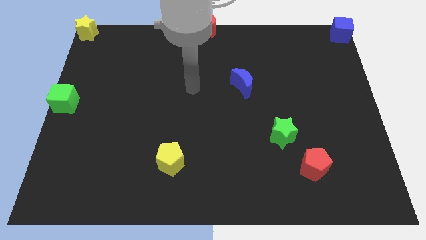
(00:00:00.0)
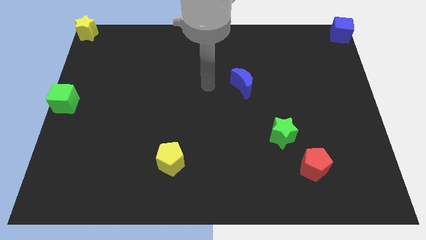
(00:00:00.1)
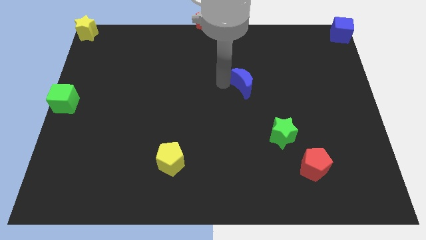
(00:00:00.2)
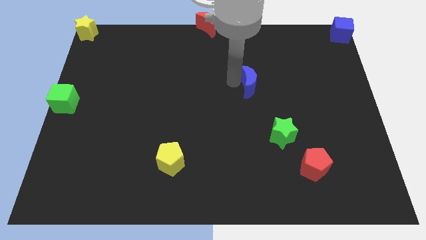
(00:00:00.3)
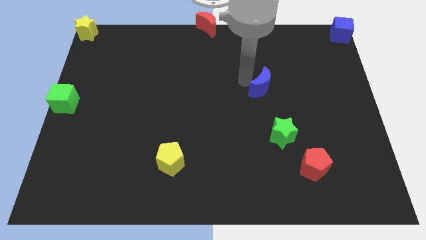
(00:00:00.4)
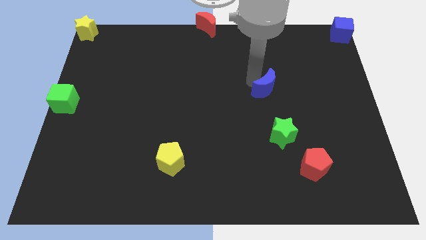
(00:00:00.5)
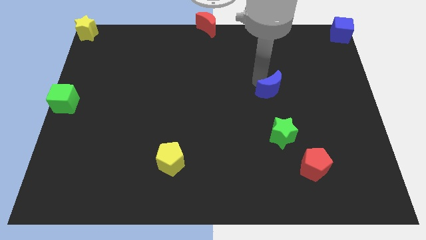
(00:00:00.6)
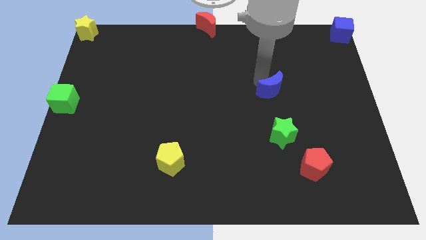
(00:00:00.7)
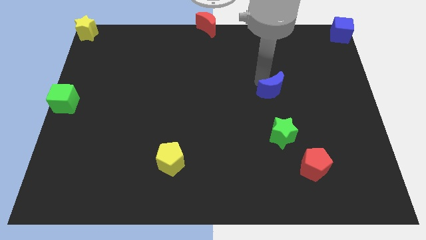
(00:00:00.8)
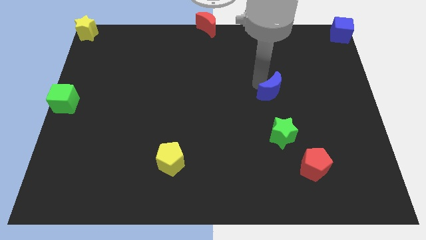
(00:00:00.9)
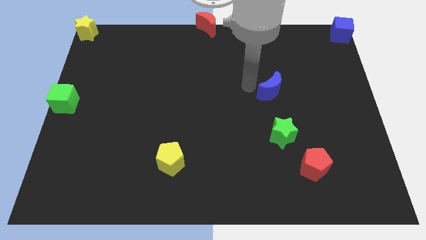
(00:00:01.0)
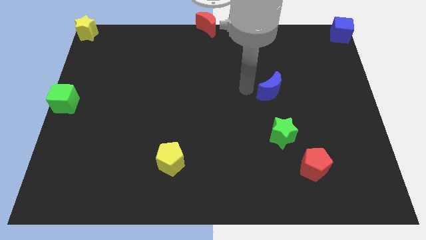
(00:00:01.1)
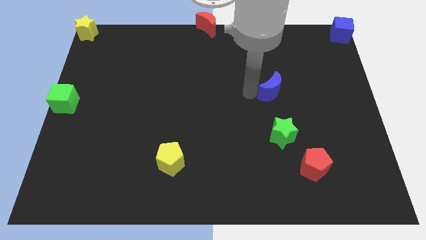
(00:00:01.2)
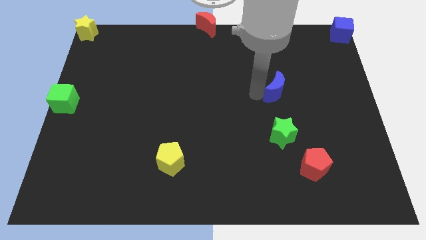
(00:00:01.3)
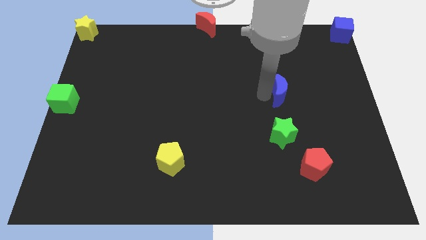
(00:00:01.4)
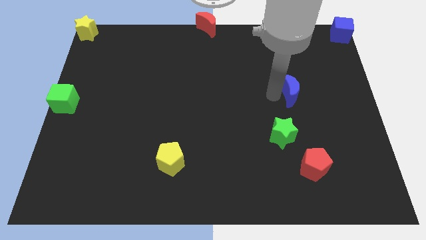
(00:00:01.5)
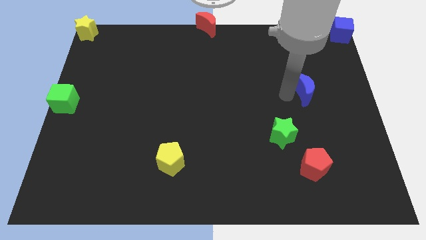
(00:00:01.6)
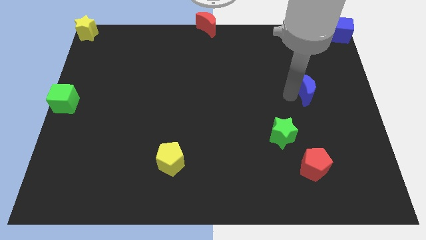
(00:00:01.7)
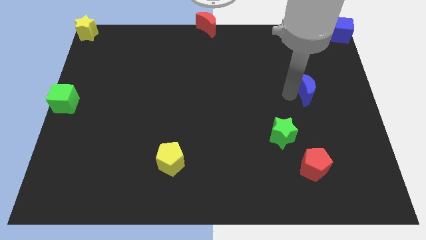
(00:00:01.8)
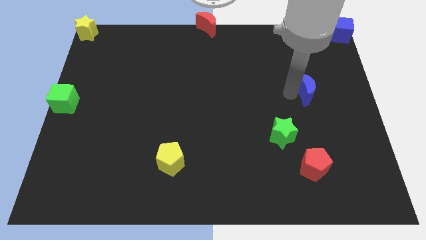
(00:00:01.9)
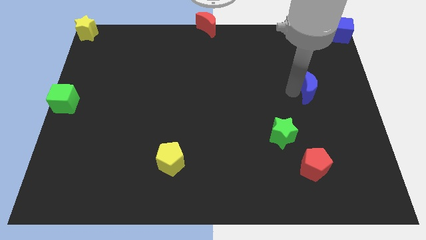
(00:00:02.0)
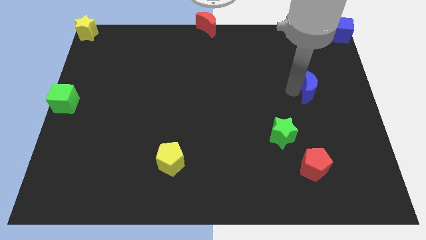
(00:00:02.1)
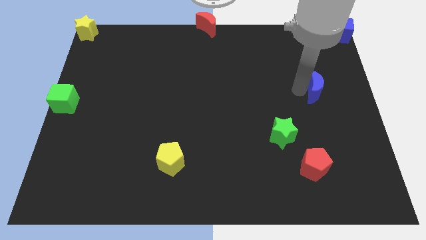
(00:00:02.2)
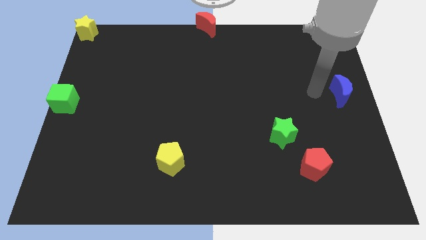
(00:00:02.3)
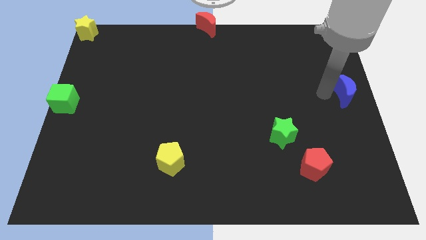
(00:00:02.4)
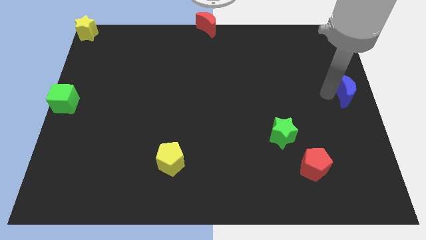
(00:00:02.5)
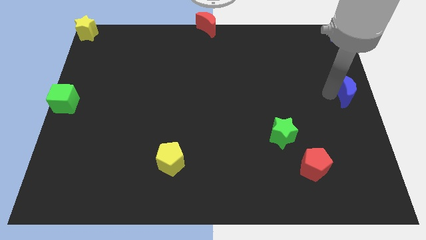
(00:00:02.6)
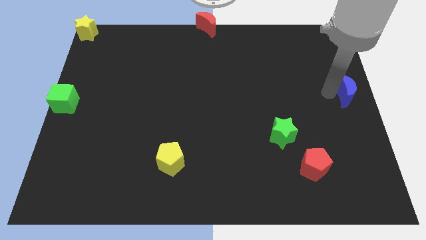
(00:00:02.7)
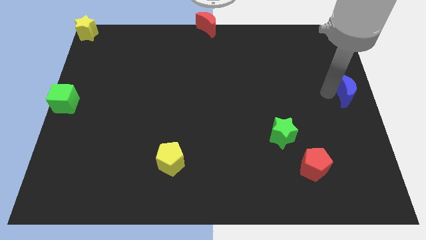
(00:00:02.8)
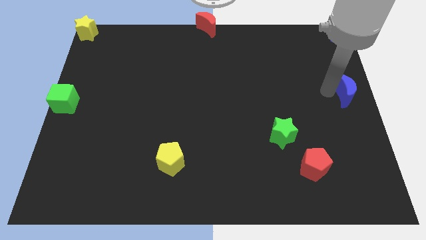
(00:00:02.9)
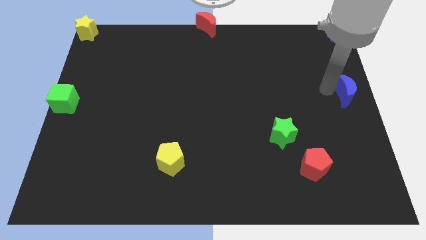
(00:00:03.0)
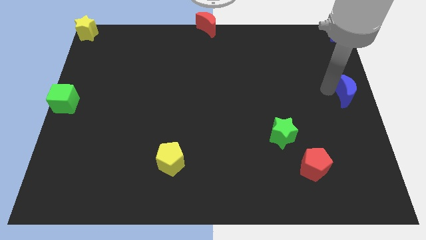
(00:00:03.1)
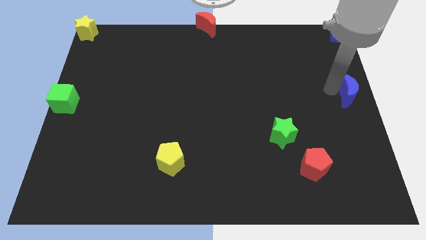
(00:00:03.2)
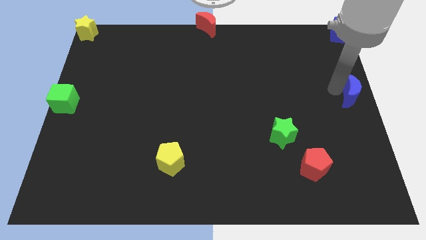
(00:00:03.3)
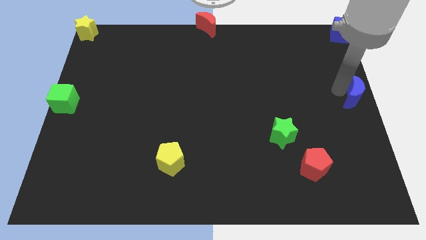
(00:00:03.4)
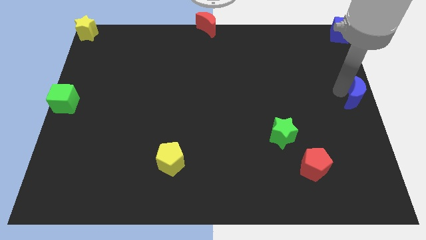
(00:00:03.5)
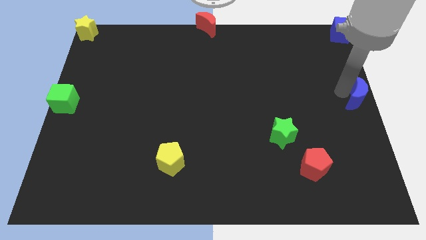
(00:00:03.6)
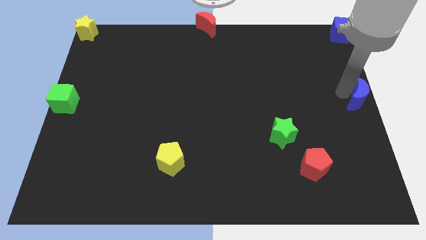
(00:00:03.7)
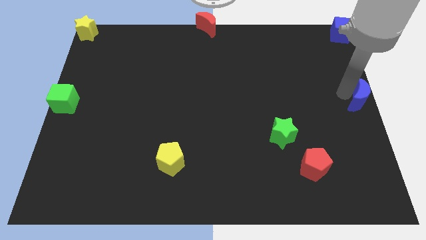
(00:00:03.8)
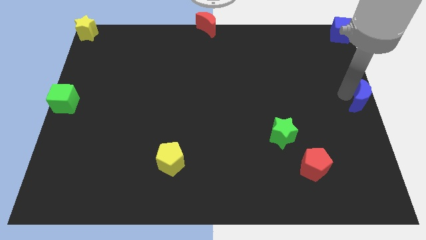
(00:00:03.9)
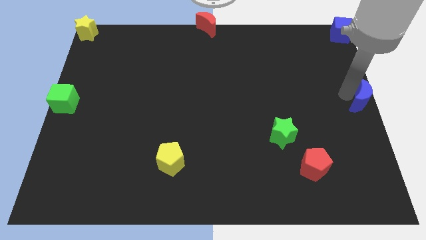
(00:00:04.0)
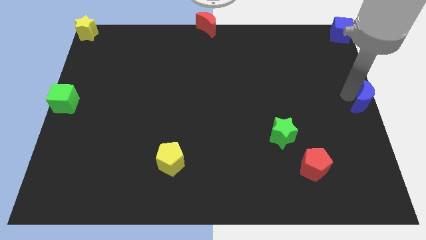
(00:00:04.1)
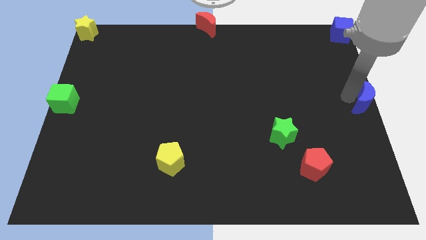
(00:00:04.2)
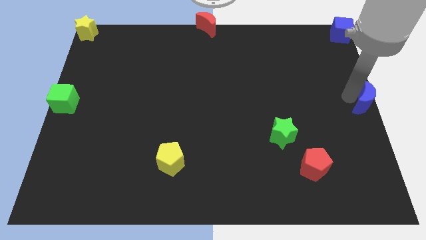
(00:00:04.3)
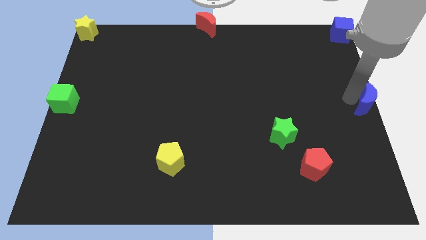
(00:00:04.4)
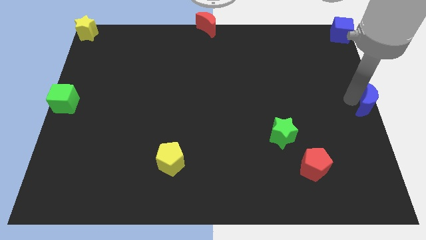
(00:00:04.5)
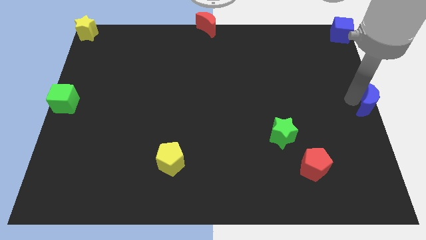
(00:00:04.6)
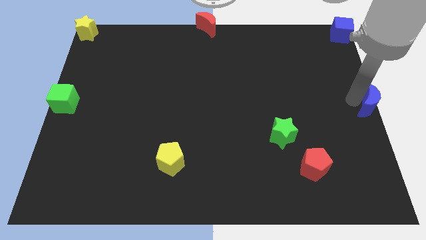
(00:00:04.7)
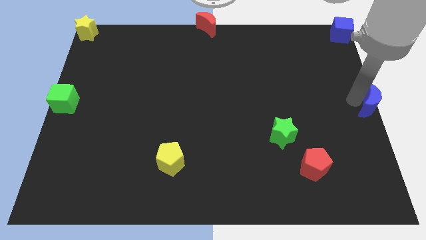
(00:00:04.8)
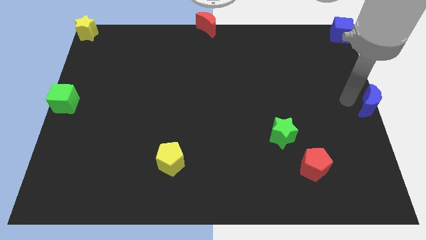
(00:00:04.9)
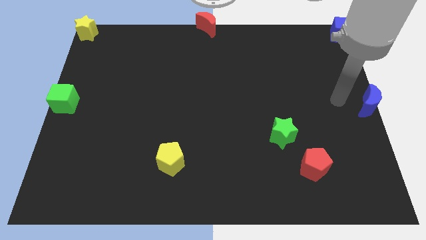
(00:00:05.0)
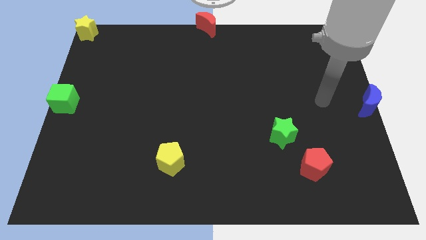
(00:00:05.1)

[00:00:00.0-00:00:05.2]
push the blue moon to the right center

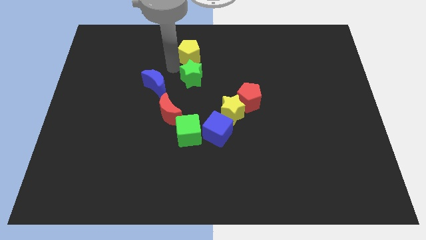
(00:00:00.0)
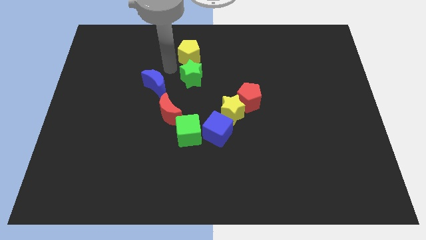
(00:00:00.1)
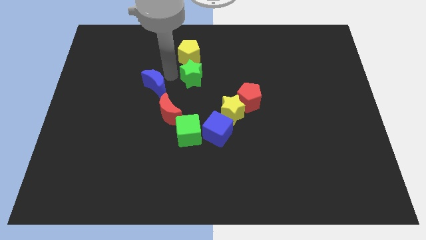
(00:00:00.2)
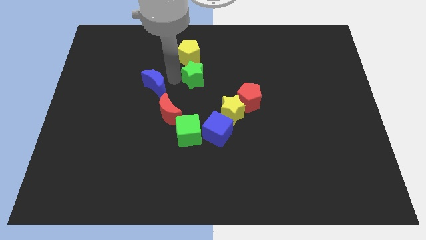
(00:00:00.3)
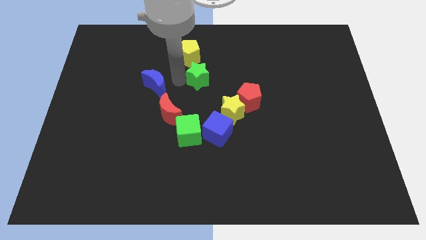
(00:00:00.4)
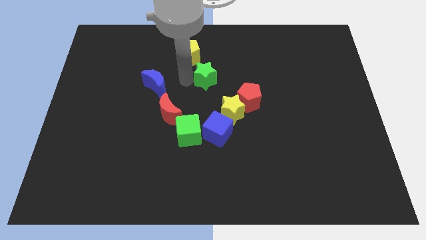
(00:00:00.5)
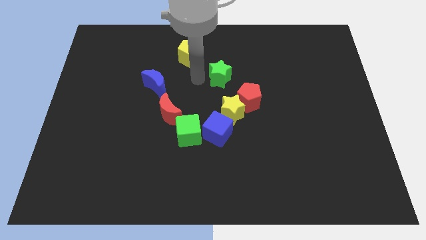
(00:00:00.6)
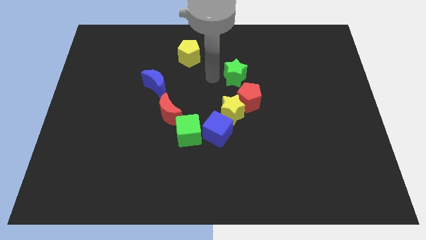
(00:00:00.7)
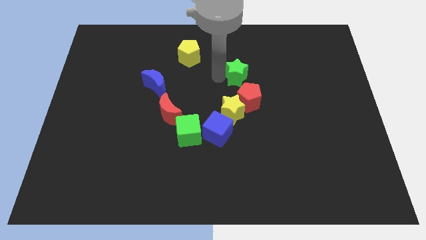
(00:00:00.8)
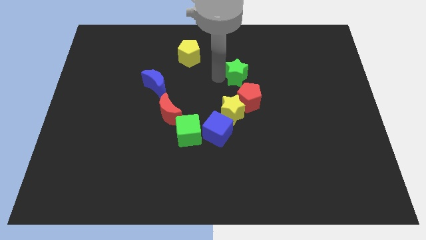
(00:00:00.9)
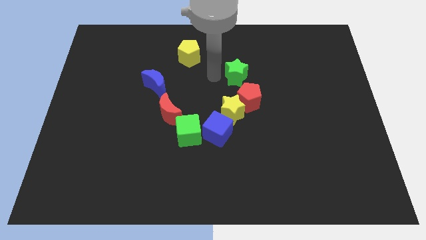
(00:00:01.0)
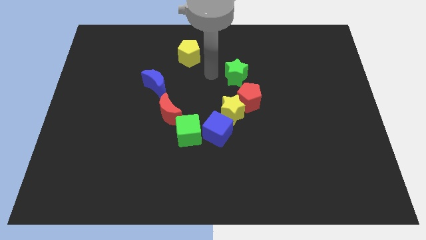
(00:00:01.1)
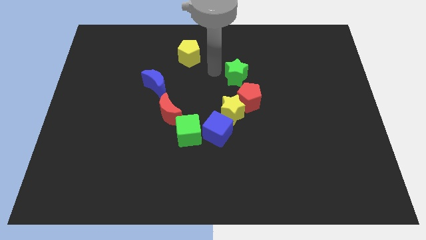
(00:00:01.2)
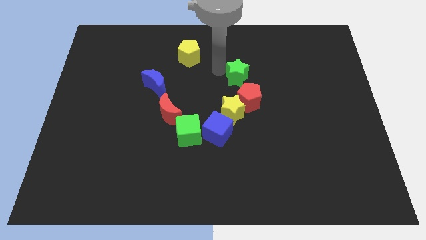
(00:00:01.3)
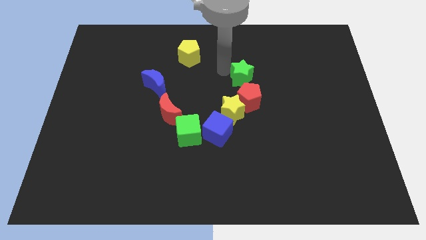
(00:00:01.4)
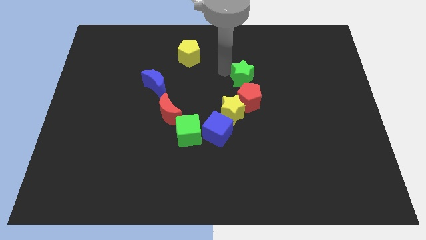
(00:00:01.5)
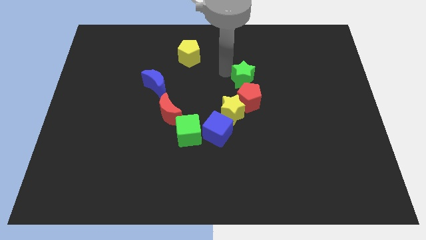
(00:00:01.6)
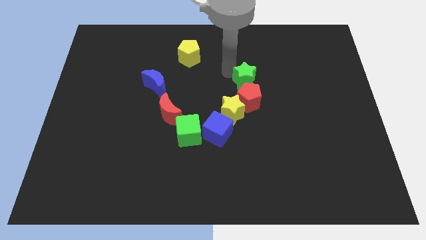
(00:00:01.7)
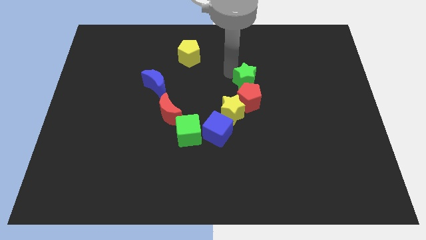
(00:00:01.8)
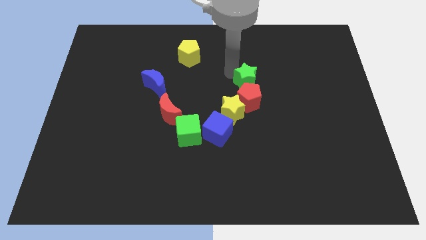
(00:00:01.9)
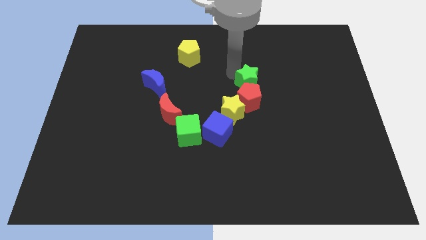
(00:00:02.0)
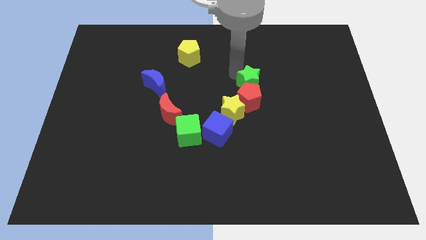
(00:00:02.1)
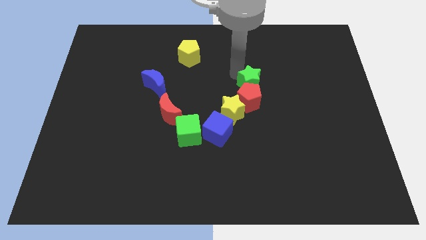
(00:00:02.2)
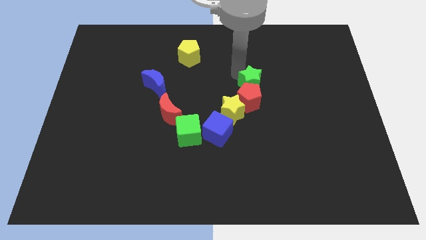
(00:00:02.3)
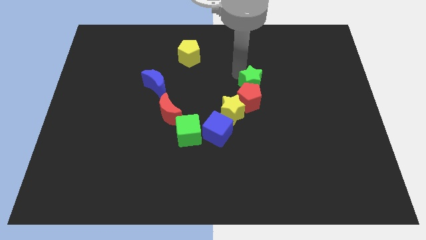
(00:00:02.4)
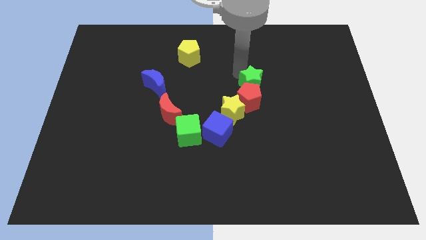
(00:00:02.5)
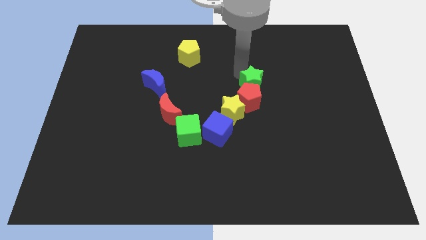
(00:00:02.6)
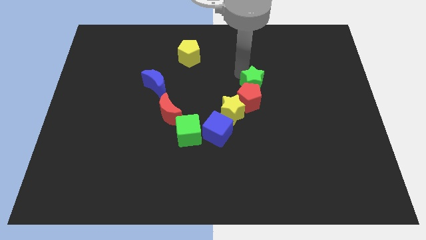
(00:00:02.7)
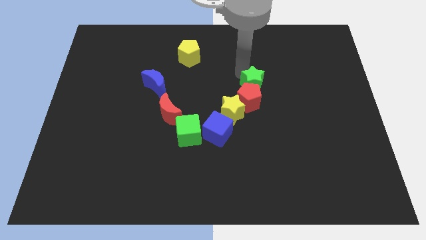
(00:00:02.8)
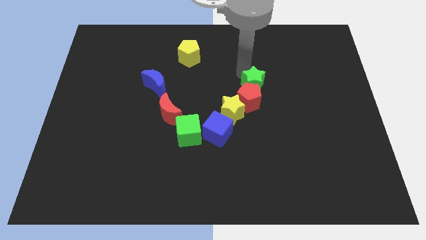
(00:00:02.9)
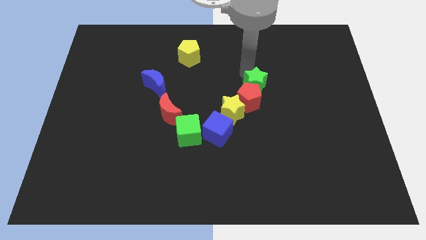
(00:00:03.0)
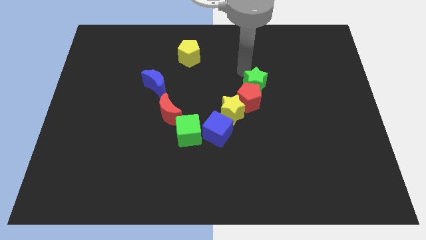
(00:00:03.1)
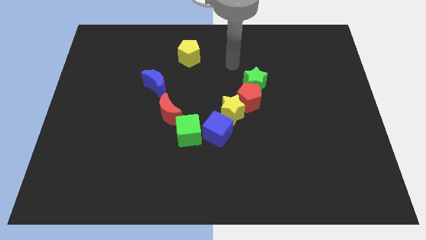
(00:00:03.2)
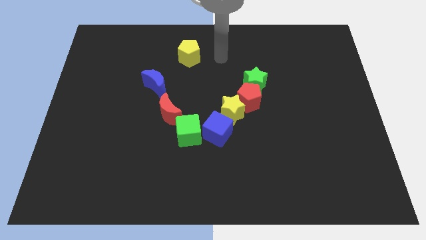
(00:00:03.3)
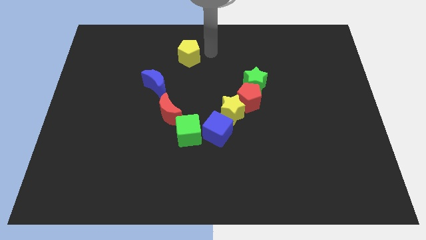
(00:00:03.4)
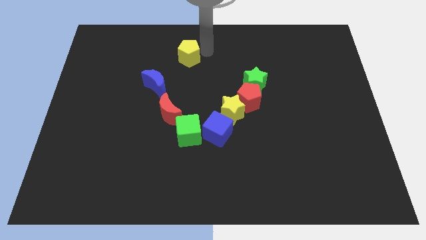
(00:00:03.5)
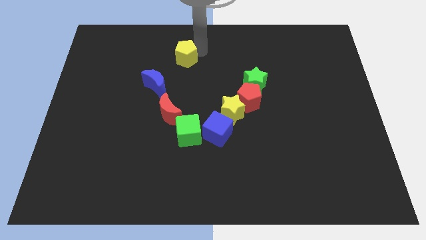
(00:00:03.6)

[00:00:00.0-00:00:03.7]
move the green star above the red pentagon
